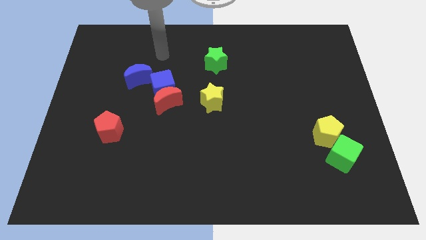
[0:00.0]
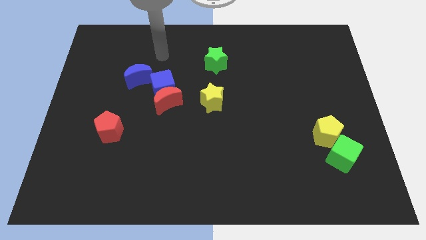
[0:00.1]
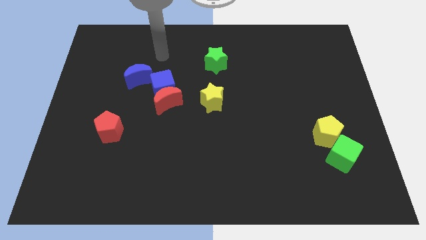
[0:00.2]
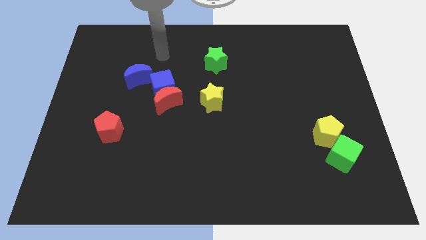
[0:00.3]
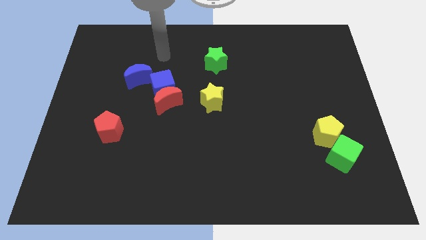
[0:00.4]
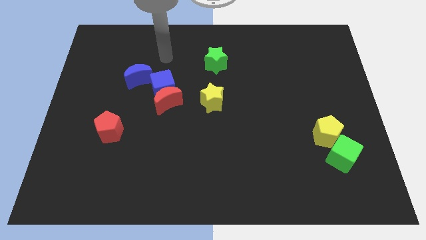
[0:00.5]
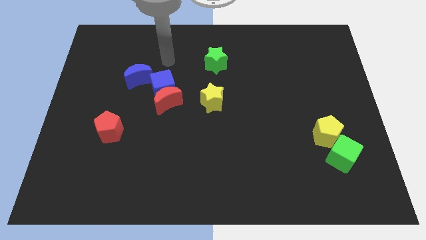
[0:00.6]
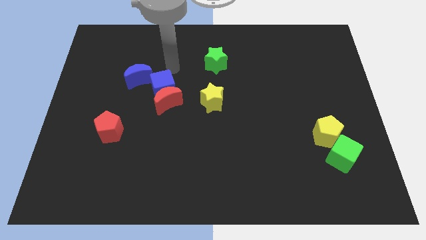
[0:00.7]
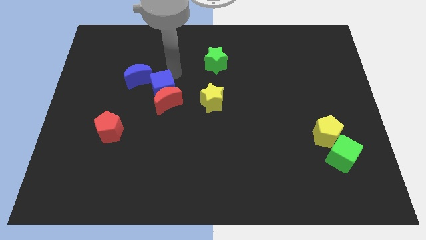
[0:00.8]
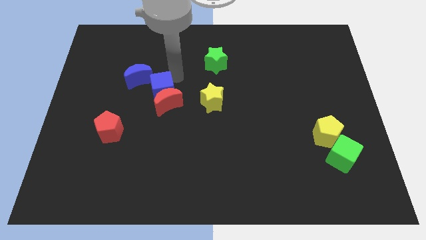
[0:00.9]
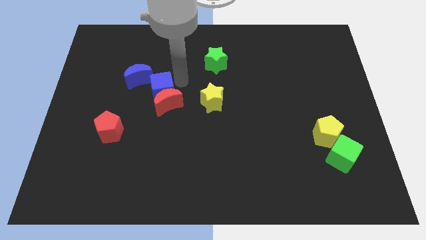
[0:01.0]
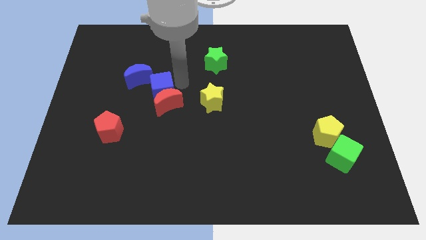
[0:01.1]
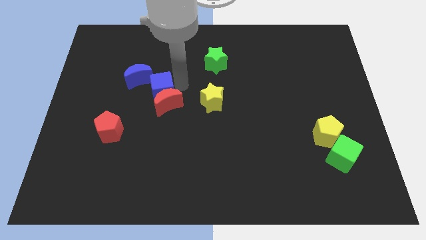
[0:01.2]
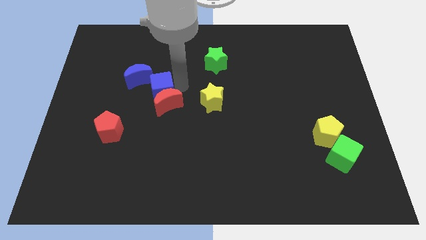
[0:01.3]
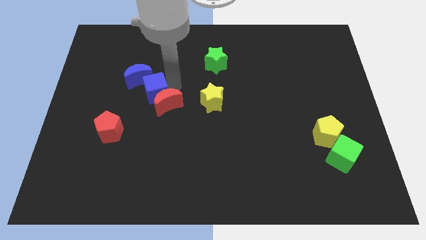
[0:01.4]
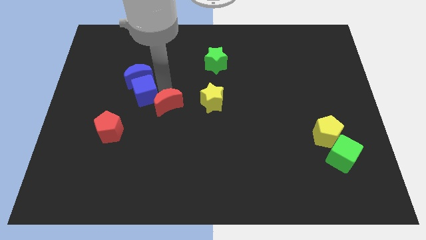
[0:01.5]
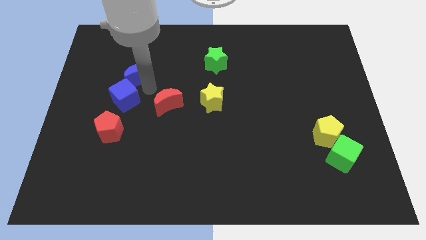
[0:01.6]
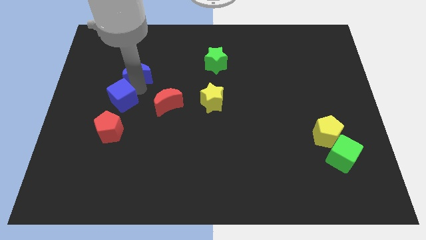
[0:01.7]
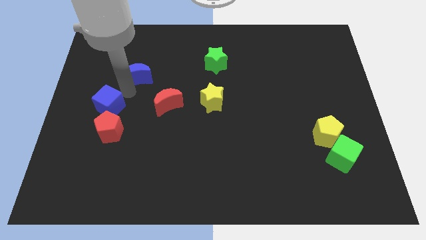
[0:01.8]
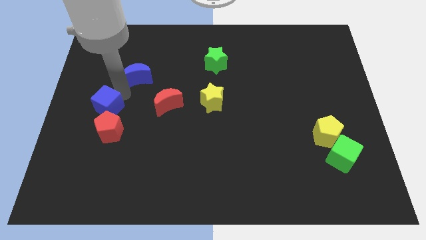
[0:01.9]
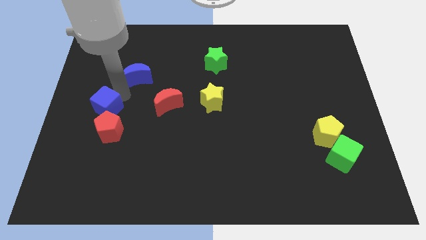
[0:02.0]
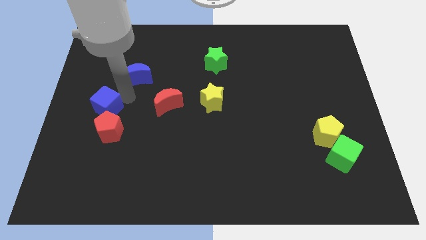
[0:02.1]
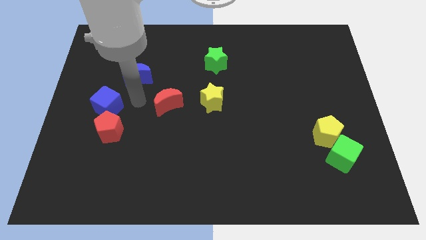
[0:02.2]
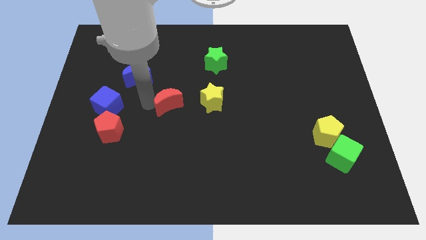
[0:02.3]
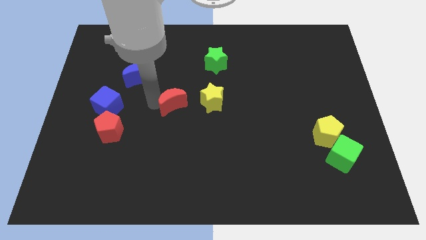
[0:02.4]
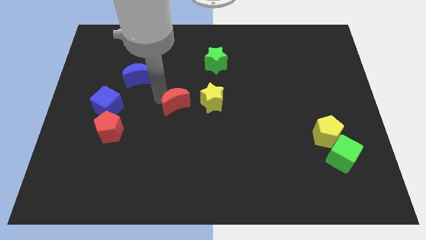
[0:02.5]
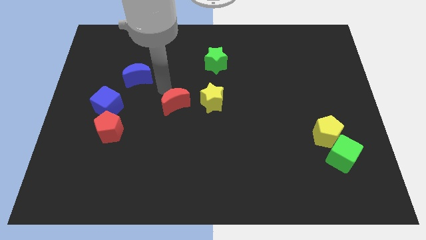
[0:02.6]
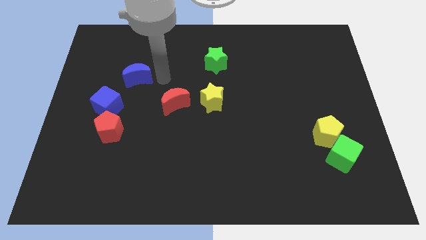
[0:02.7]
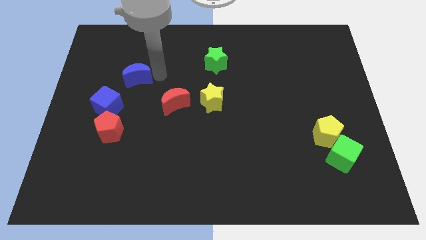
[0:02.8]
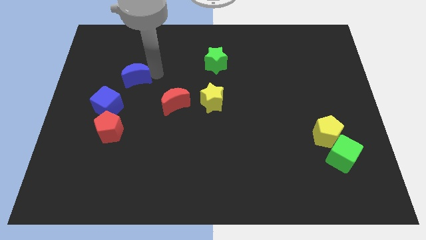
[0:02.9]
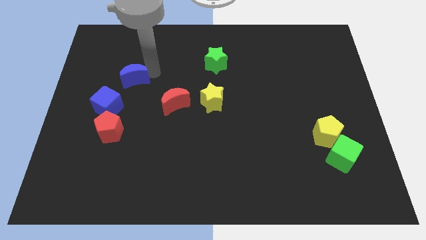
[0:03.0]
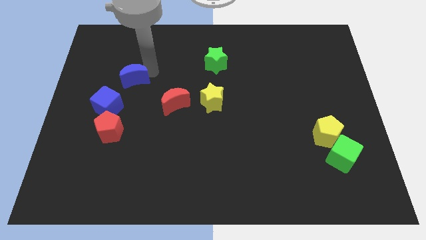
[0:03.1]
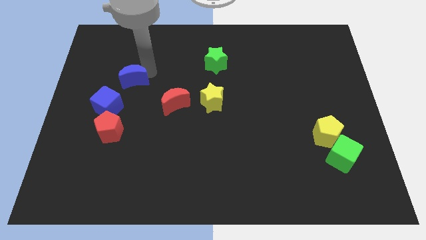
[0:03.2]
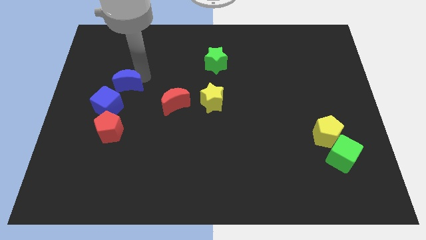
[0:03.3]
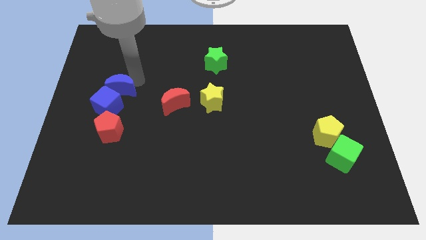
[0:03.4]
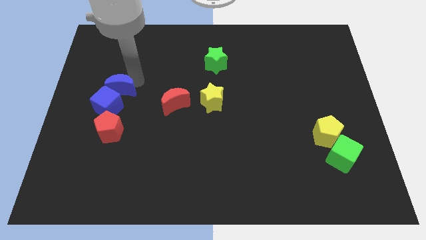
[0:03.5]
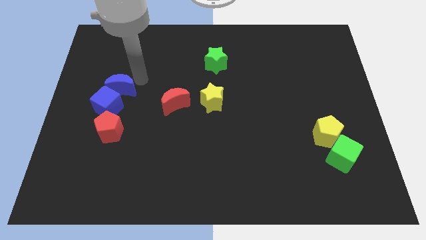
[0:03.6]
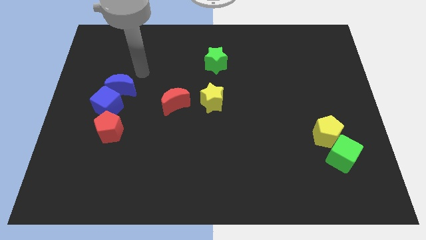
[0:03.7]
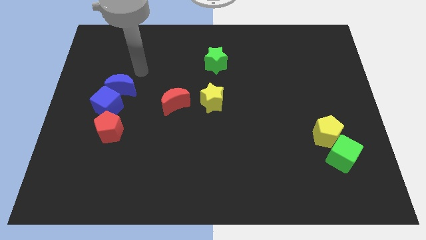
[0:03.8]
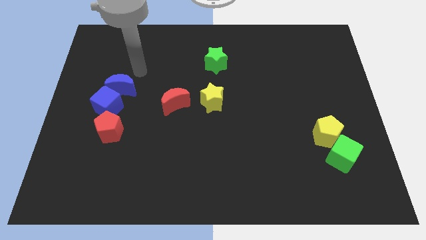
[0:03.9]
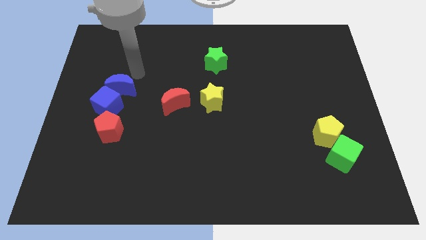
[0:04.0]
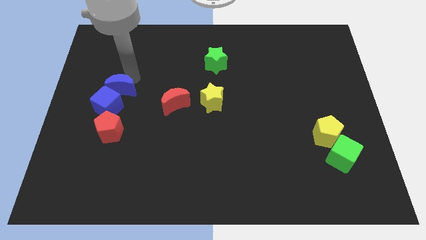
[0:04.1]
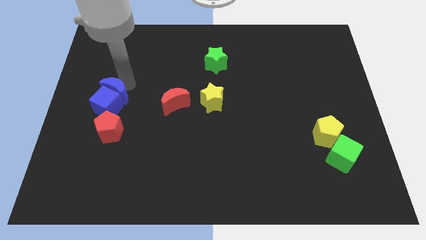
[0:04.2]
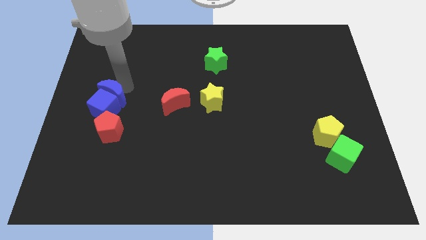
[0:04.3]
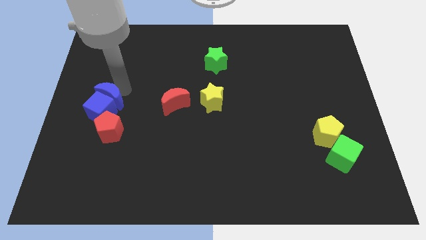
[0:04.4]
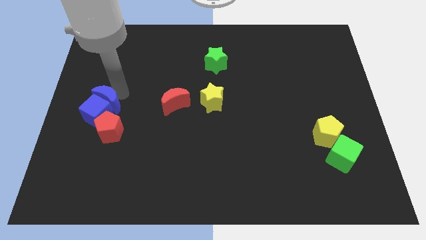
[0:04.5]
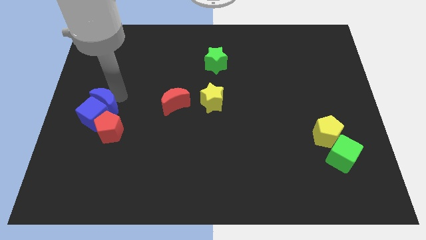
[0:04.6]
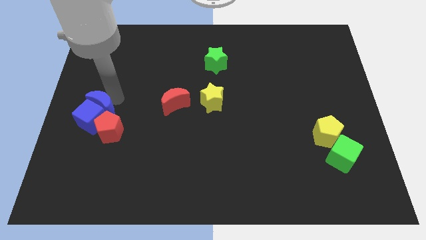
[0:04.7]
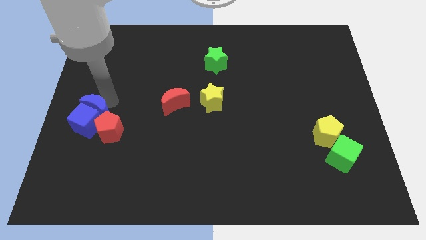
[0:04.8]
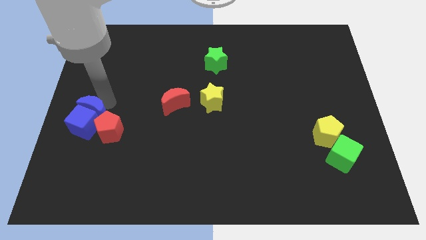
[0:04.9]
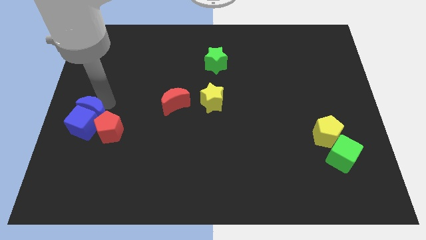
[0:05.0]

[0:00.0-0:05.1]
push both the blue blocks to the top left side of the red pentagon

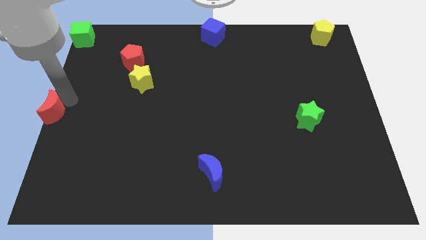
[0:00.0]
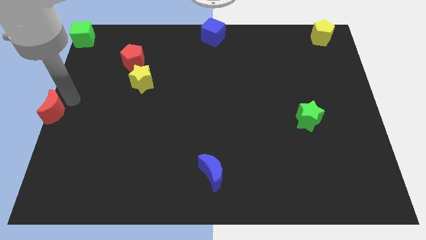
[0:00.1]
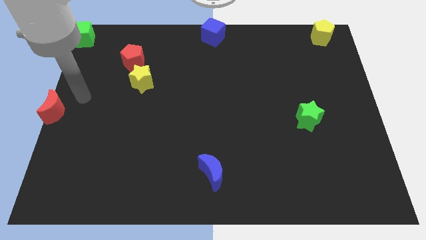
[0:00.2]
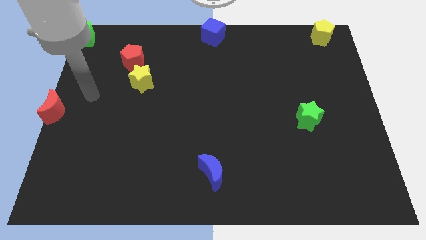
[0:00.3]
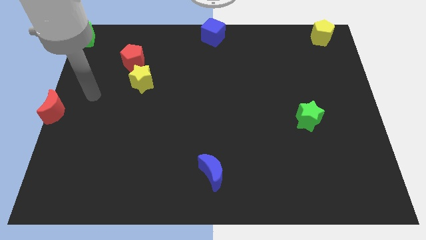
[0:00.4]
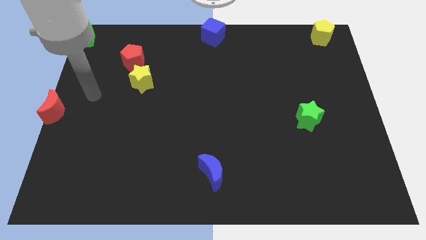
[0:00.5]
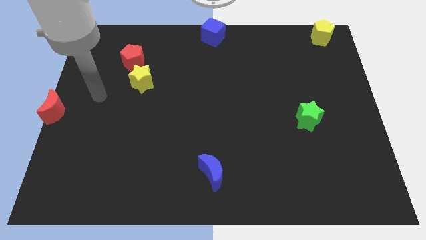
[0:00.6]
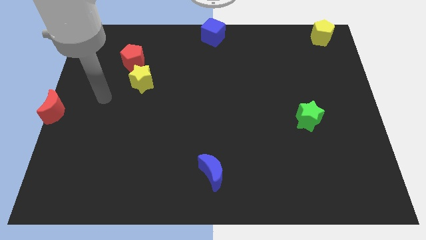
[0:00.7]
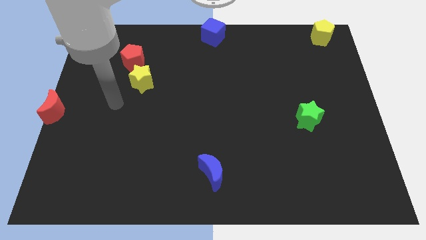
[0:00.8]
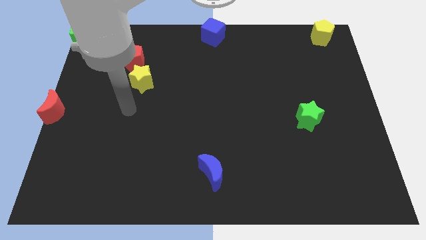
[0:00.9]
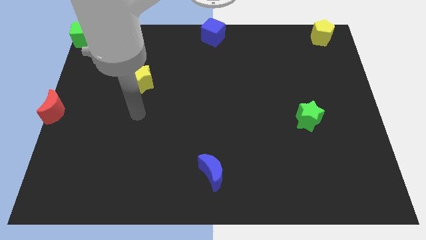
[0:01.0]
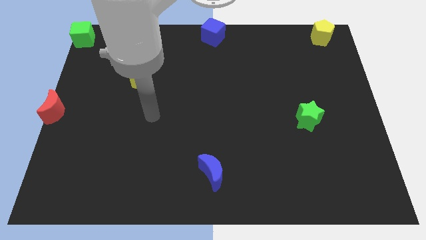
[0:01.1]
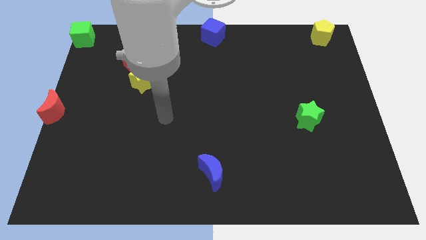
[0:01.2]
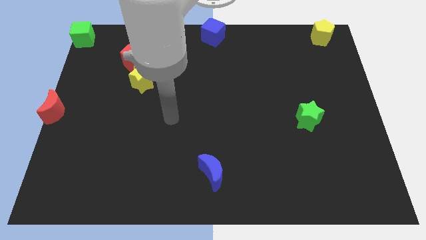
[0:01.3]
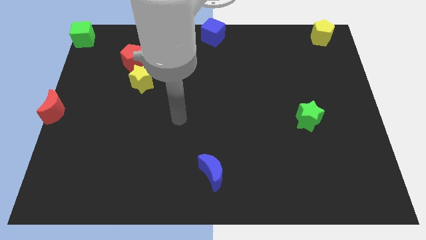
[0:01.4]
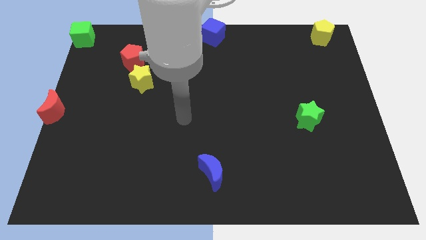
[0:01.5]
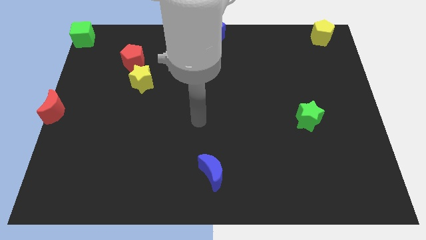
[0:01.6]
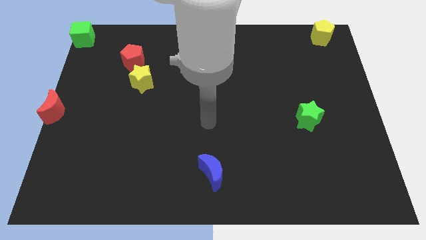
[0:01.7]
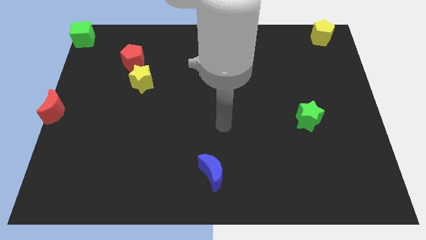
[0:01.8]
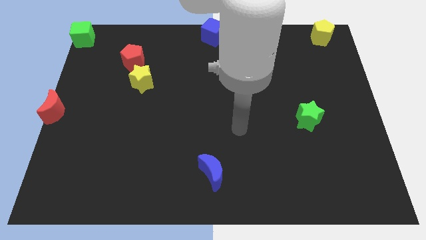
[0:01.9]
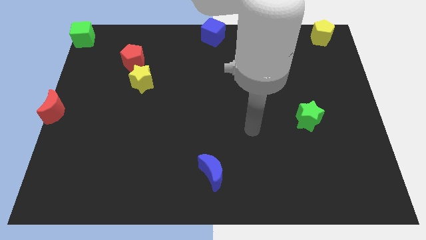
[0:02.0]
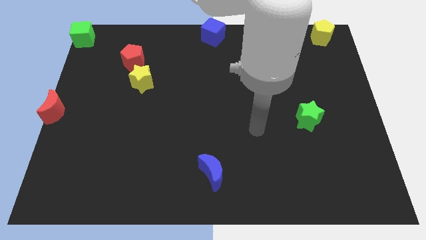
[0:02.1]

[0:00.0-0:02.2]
move your arm away from the red crecent

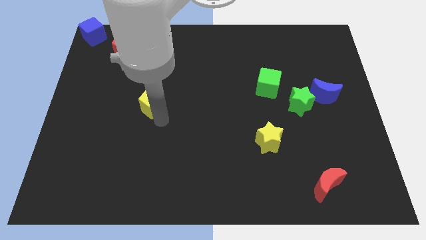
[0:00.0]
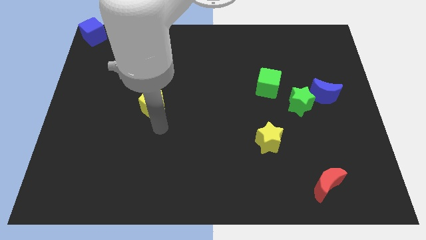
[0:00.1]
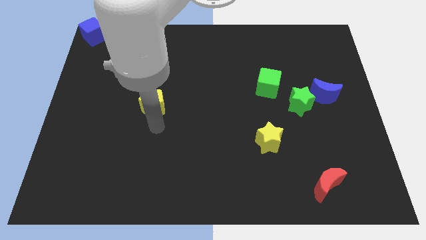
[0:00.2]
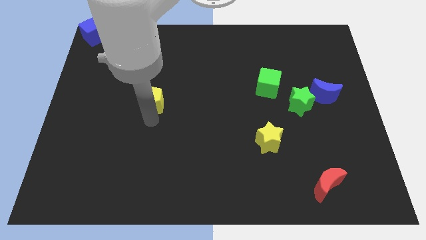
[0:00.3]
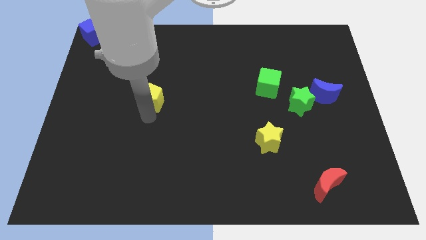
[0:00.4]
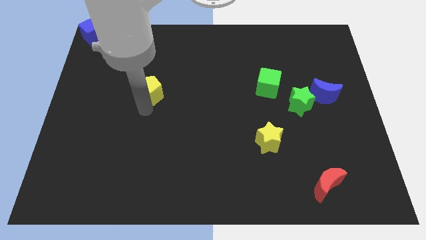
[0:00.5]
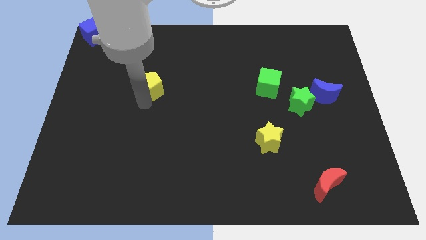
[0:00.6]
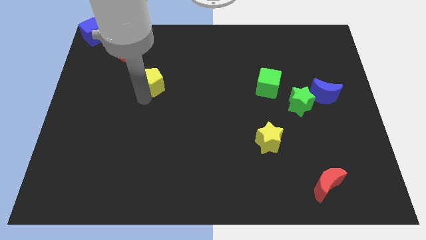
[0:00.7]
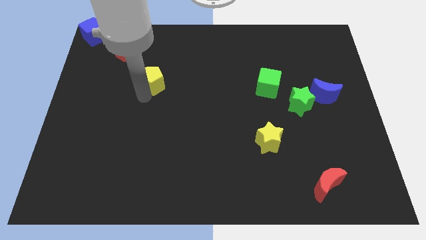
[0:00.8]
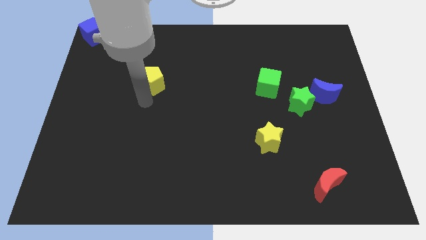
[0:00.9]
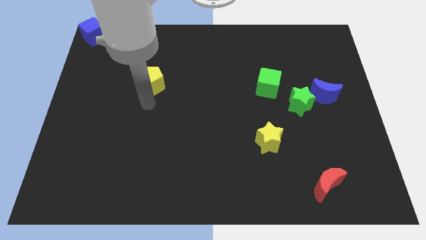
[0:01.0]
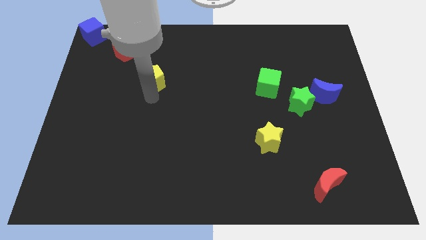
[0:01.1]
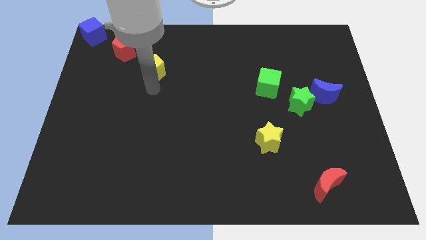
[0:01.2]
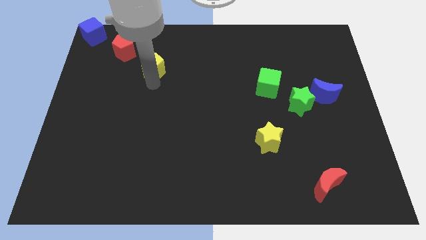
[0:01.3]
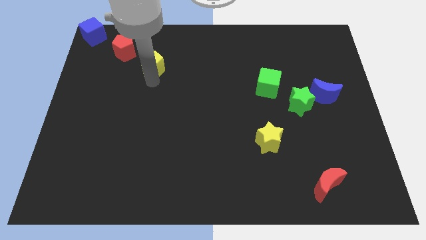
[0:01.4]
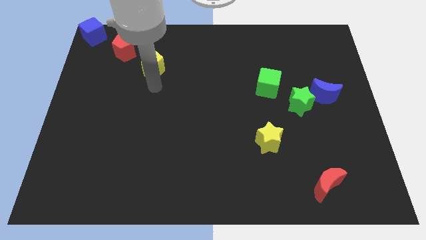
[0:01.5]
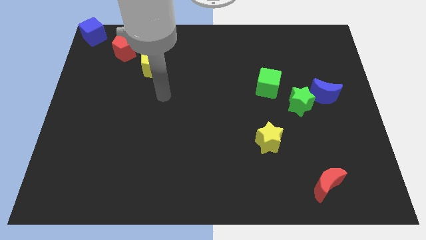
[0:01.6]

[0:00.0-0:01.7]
move the yellow pentagon near to the red pentagon
